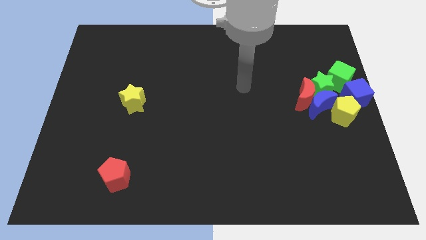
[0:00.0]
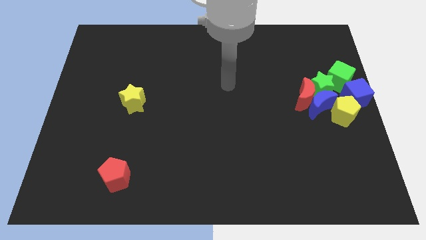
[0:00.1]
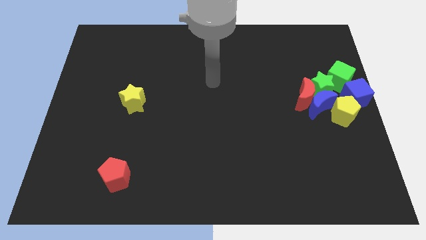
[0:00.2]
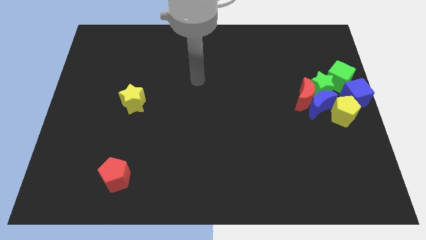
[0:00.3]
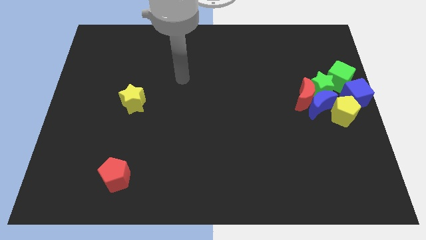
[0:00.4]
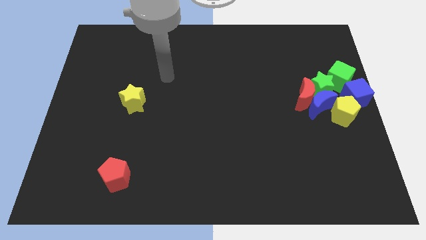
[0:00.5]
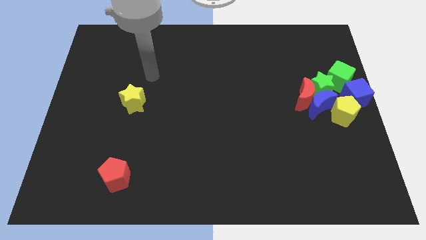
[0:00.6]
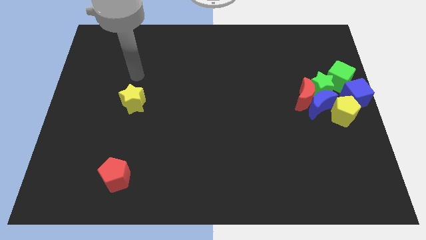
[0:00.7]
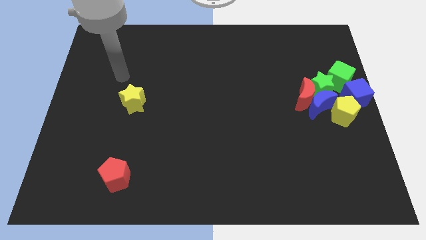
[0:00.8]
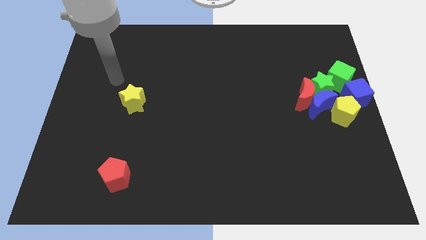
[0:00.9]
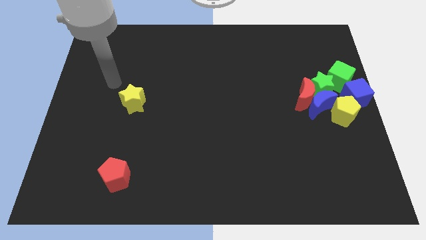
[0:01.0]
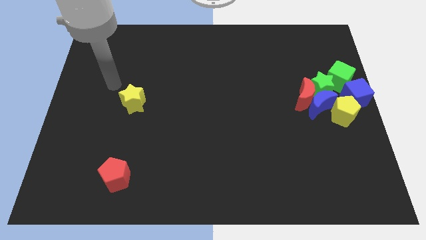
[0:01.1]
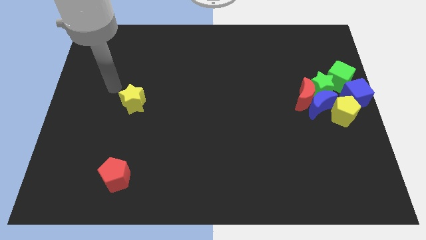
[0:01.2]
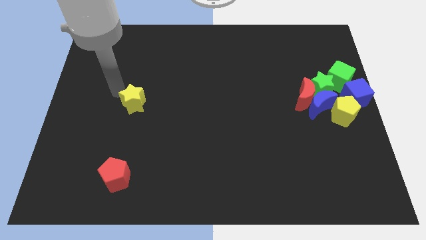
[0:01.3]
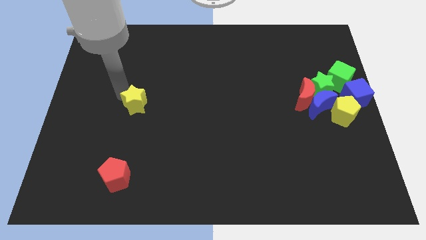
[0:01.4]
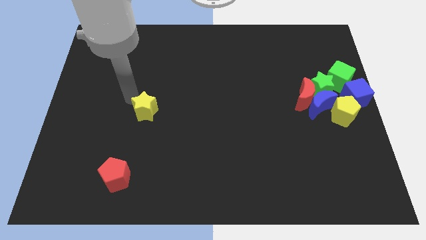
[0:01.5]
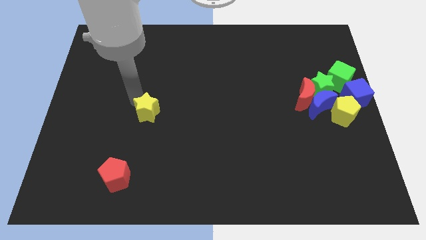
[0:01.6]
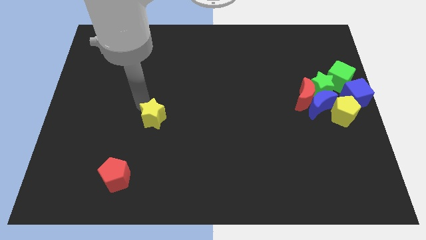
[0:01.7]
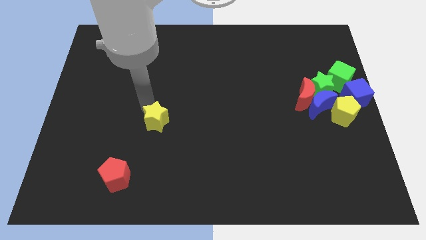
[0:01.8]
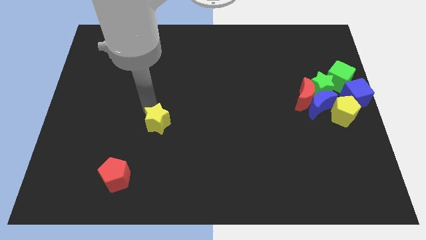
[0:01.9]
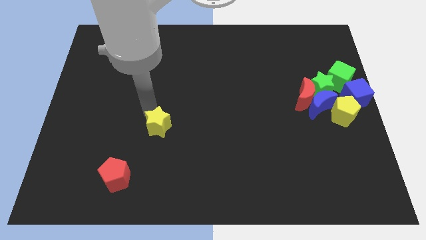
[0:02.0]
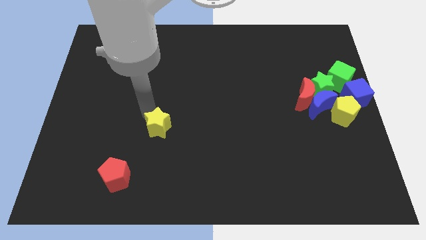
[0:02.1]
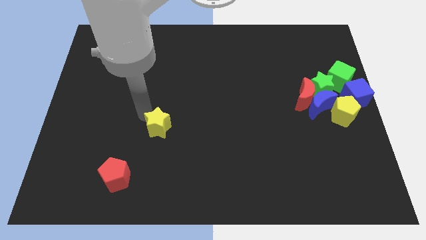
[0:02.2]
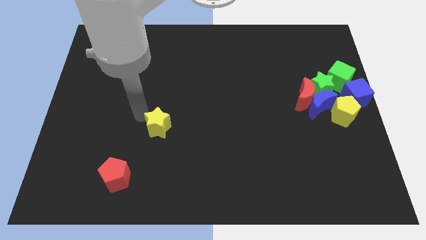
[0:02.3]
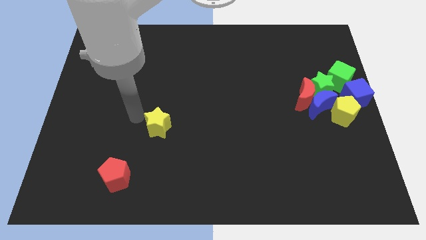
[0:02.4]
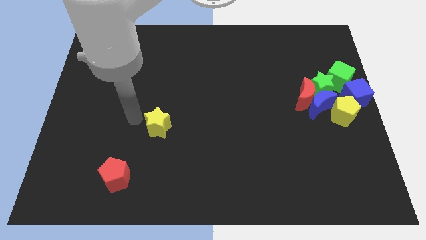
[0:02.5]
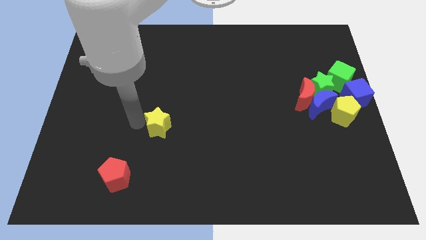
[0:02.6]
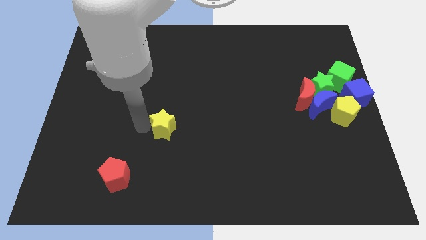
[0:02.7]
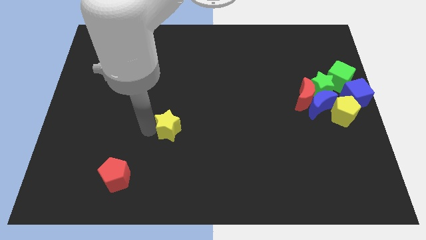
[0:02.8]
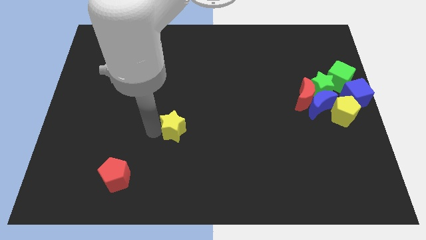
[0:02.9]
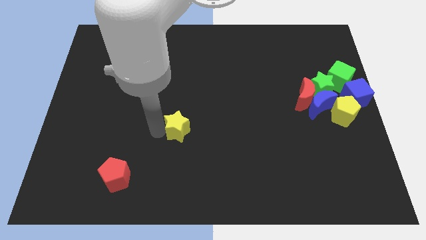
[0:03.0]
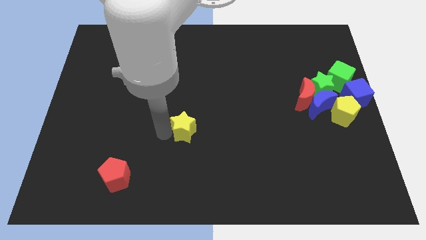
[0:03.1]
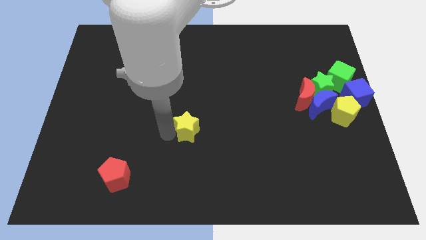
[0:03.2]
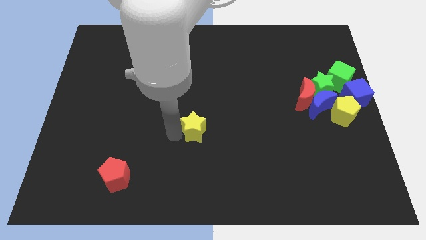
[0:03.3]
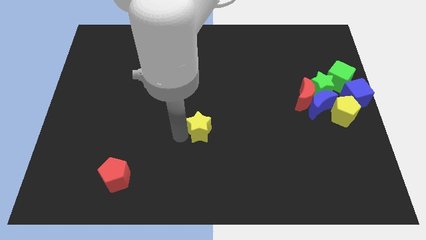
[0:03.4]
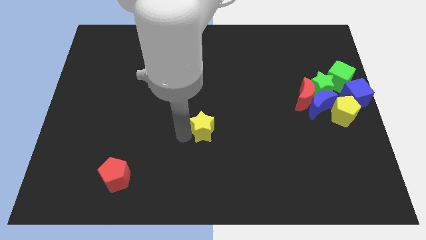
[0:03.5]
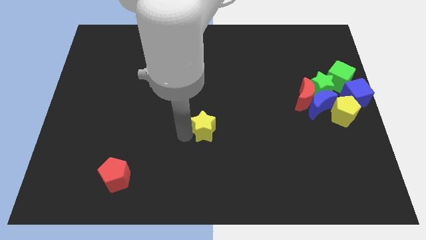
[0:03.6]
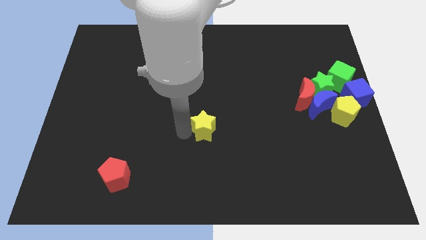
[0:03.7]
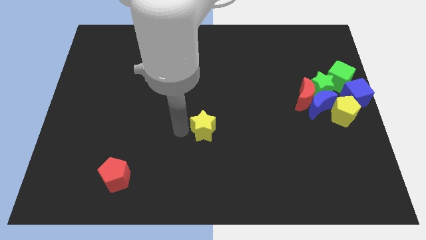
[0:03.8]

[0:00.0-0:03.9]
move the yellow star towards the center of the board

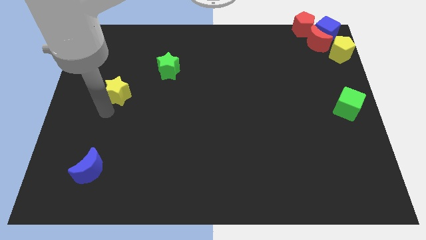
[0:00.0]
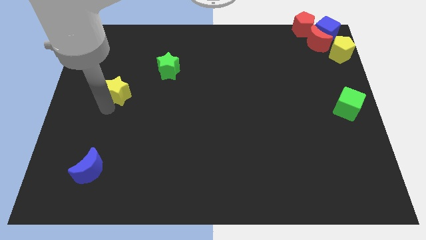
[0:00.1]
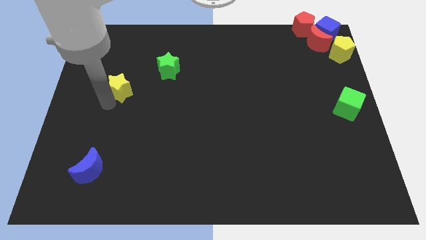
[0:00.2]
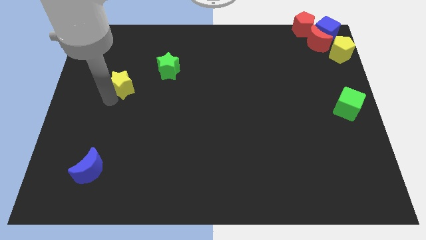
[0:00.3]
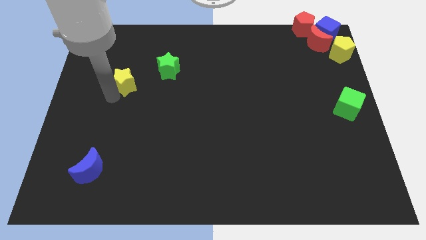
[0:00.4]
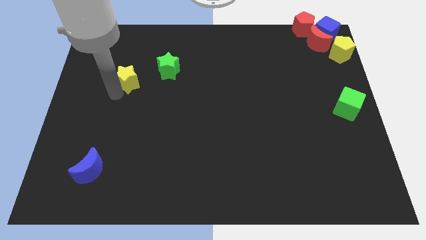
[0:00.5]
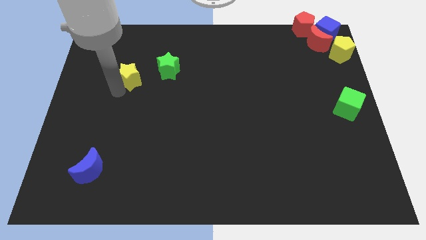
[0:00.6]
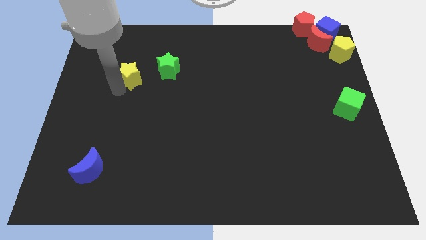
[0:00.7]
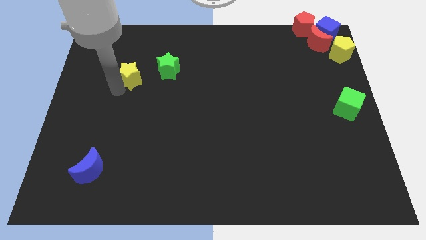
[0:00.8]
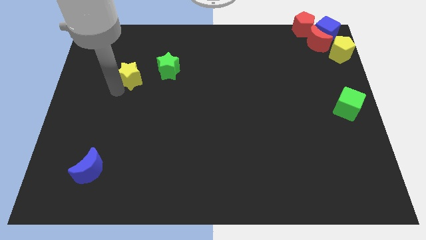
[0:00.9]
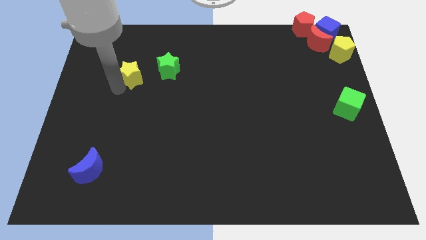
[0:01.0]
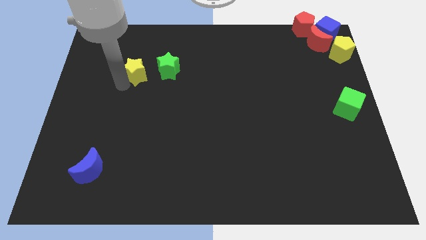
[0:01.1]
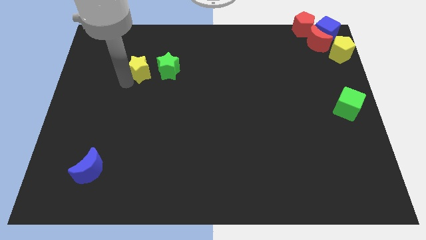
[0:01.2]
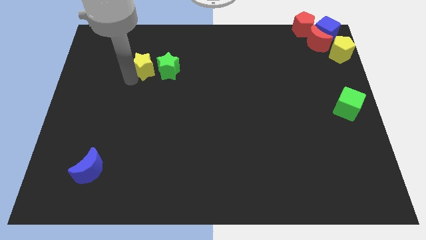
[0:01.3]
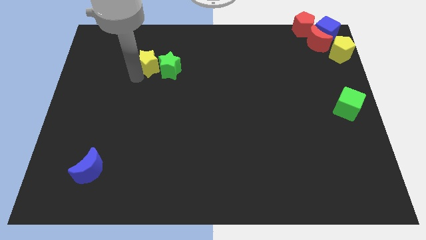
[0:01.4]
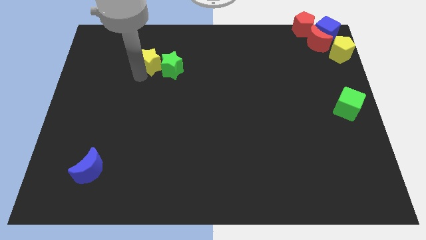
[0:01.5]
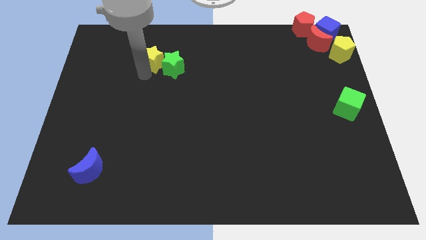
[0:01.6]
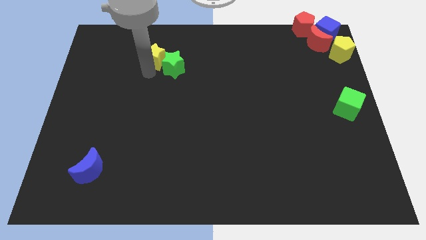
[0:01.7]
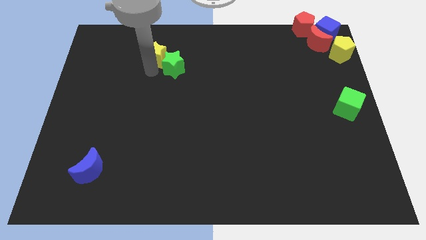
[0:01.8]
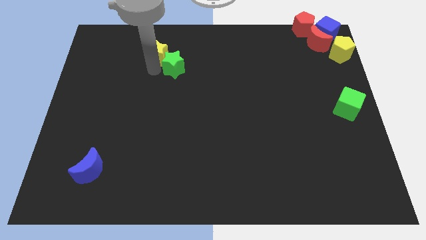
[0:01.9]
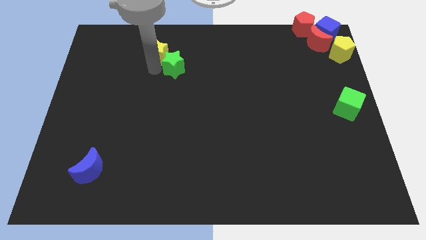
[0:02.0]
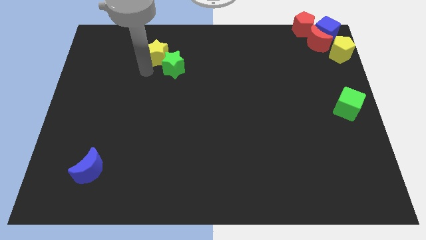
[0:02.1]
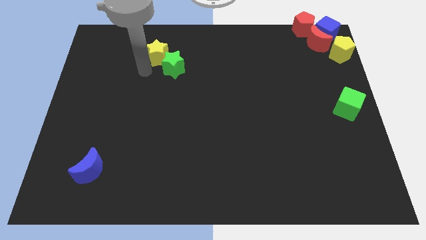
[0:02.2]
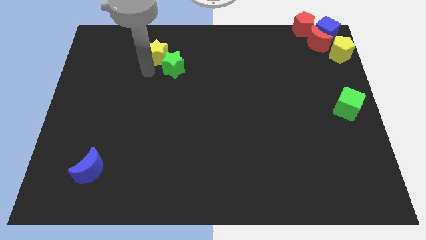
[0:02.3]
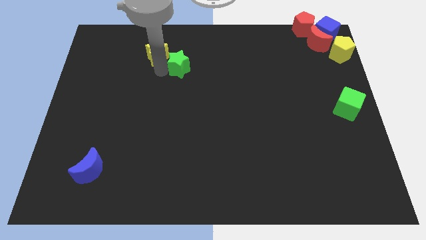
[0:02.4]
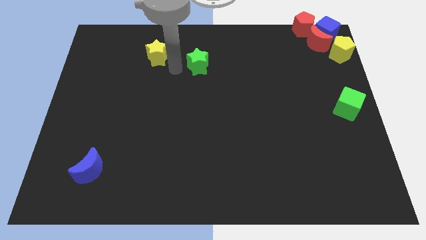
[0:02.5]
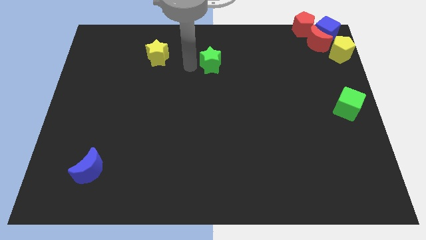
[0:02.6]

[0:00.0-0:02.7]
push the yellow star to the green star

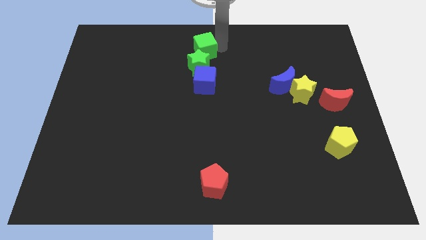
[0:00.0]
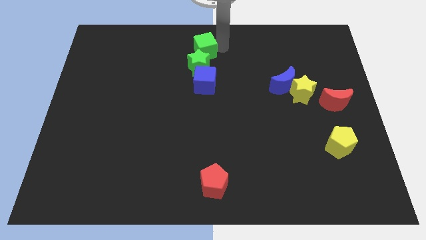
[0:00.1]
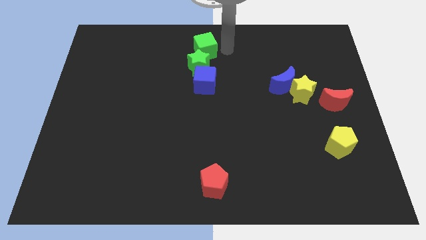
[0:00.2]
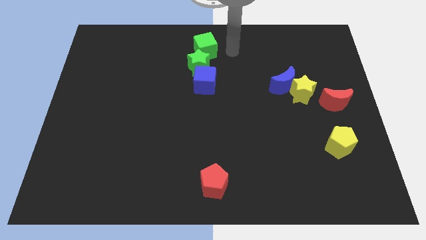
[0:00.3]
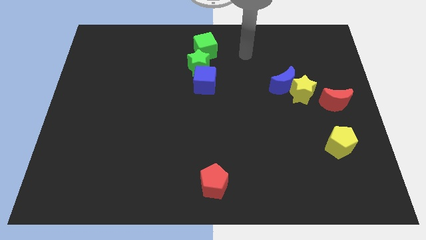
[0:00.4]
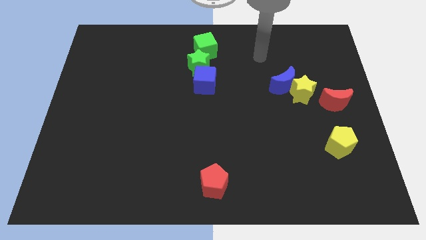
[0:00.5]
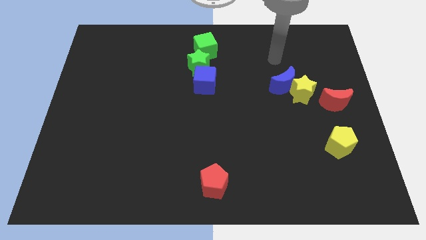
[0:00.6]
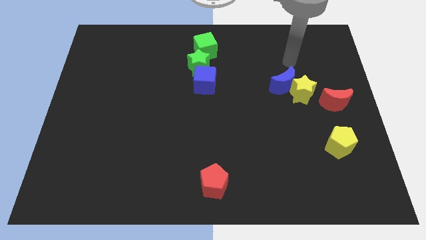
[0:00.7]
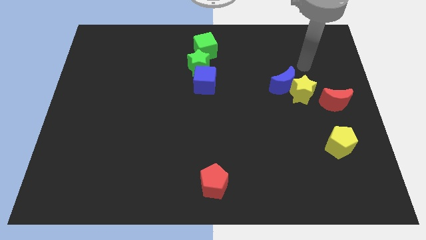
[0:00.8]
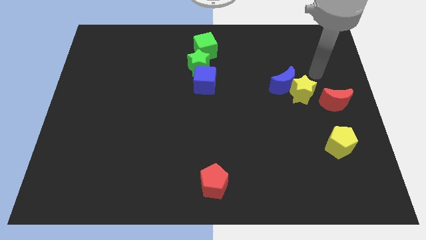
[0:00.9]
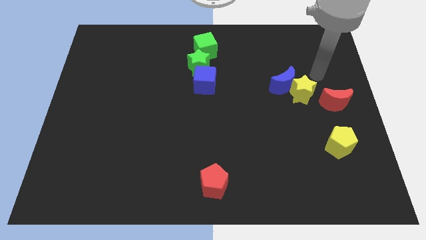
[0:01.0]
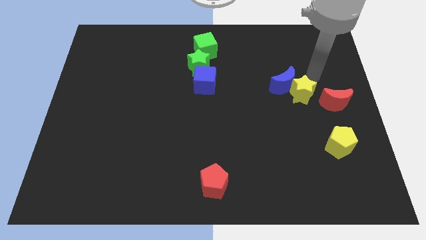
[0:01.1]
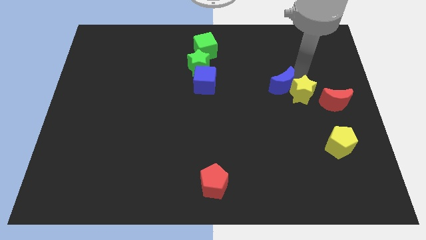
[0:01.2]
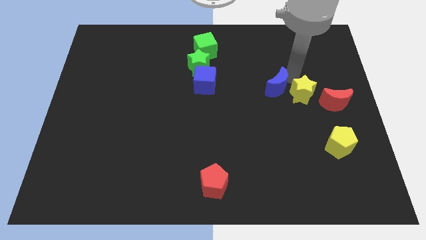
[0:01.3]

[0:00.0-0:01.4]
move the arm away from the green cube

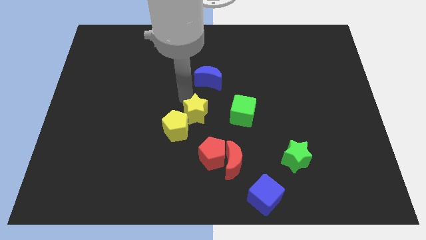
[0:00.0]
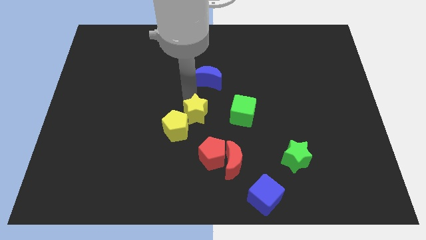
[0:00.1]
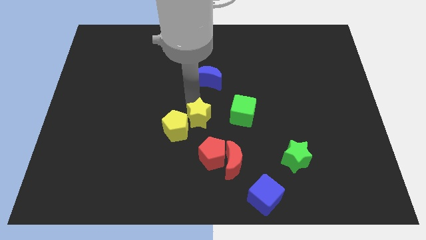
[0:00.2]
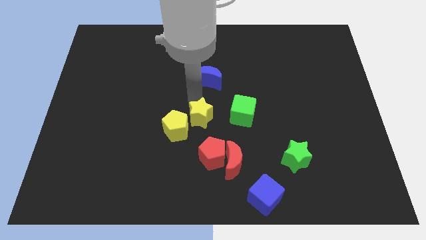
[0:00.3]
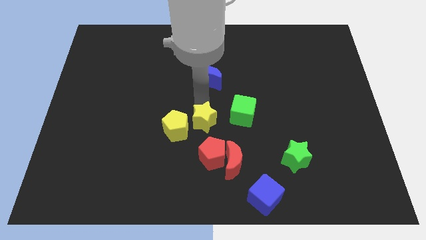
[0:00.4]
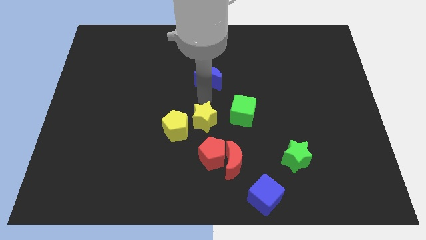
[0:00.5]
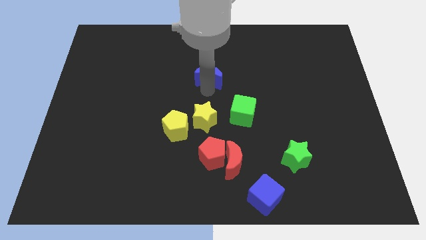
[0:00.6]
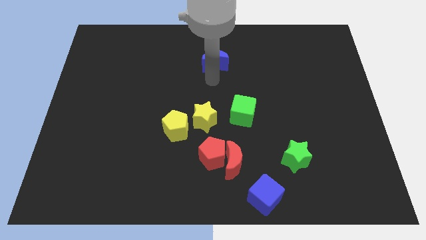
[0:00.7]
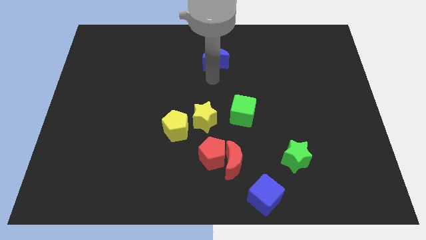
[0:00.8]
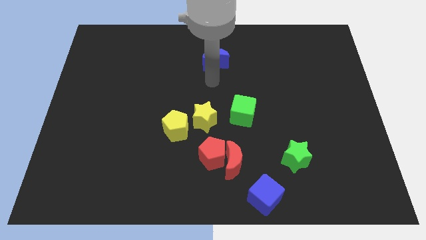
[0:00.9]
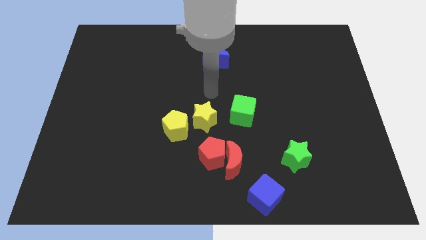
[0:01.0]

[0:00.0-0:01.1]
place blue crescent towards upwards
